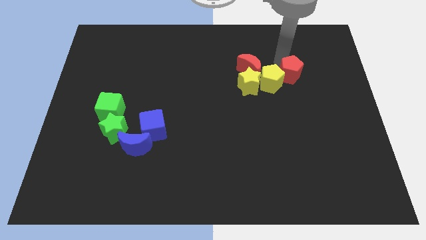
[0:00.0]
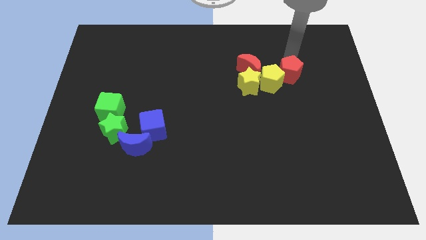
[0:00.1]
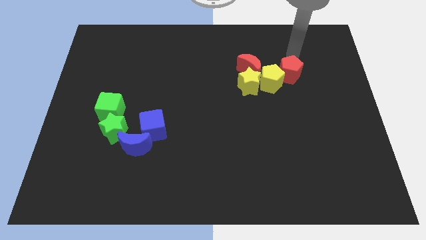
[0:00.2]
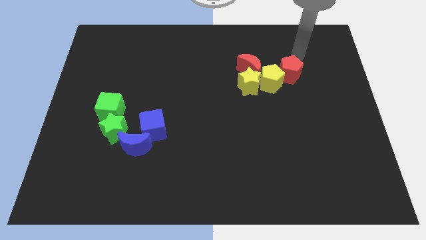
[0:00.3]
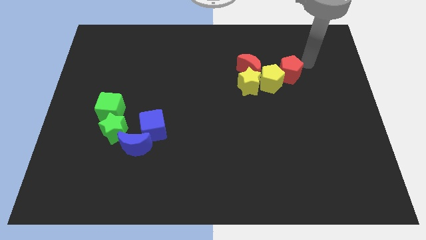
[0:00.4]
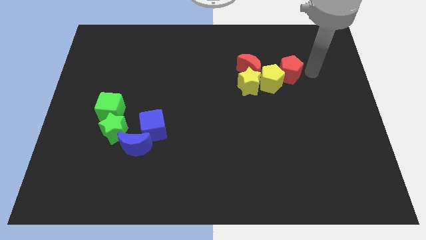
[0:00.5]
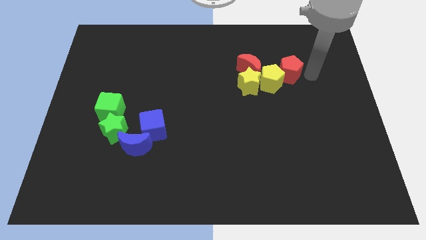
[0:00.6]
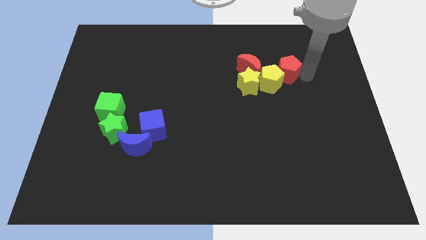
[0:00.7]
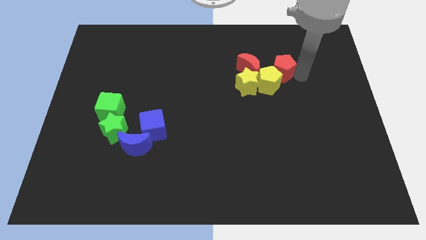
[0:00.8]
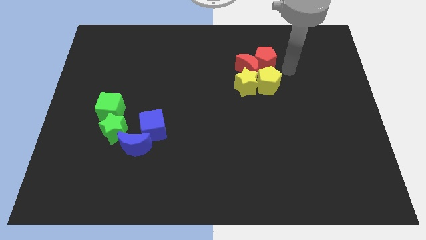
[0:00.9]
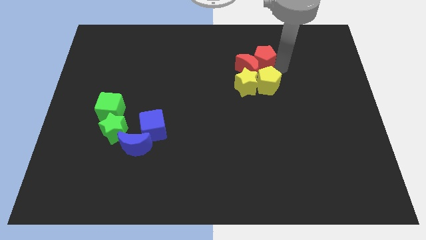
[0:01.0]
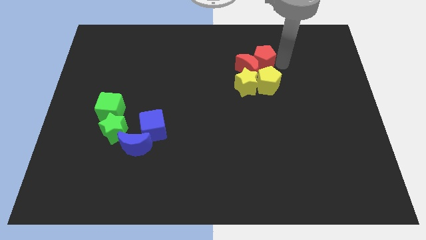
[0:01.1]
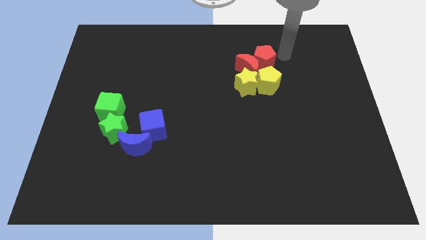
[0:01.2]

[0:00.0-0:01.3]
slide the red pentagon into the red crescent

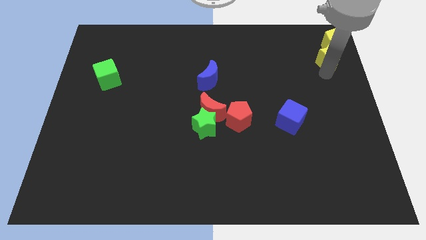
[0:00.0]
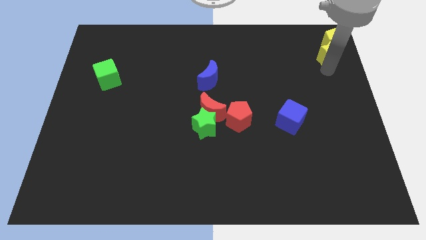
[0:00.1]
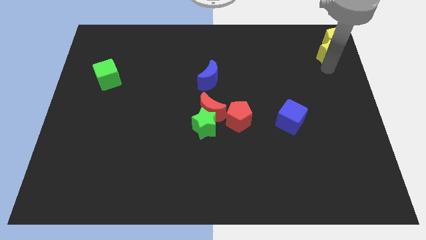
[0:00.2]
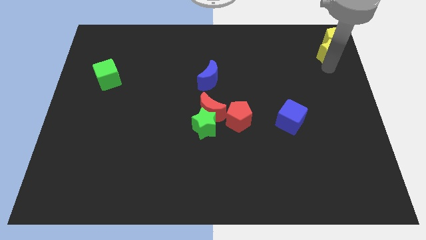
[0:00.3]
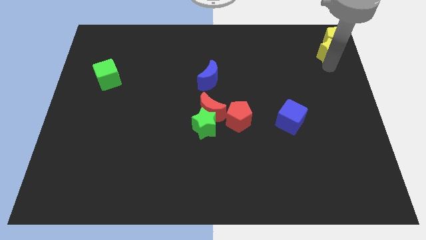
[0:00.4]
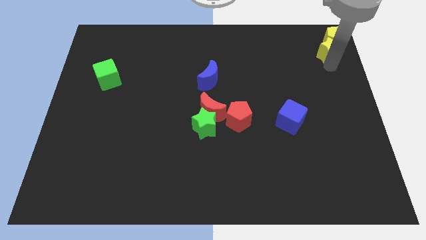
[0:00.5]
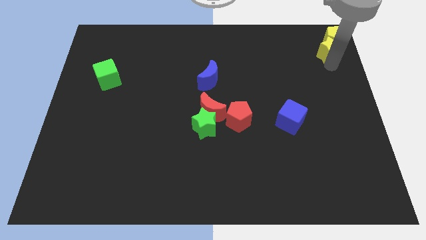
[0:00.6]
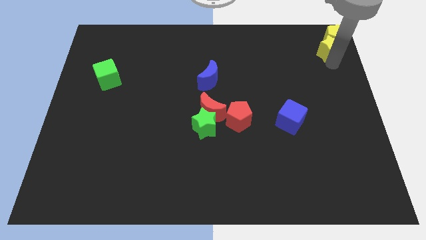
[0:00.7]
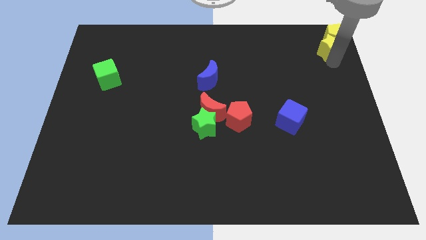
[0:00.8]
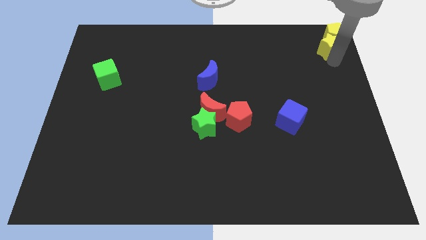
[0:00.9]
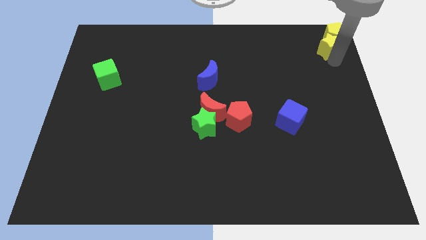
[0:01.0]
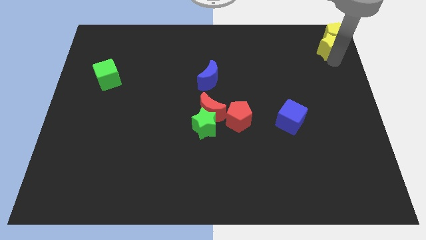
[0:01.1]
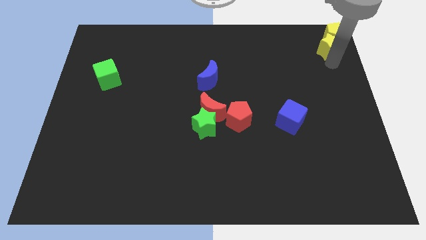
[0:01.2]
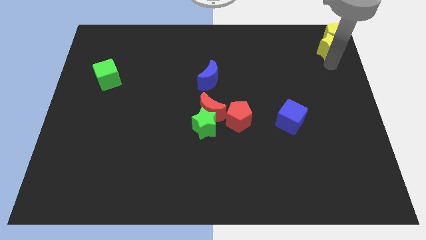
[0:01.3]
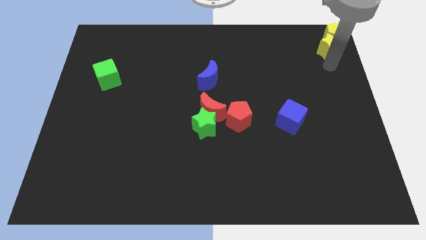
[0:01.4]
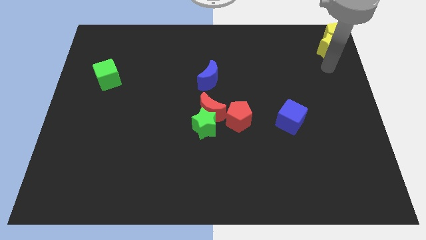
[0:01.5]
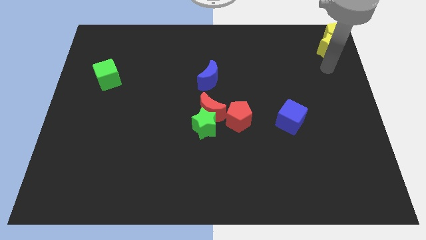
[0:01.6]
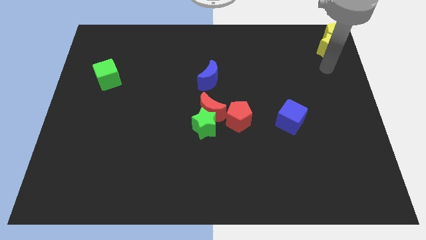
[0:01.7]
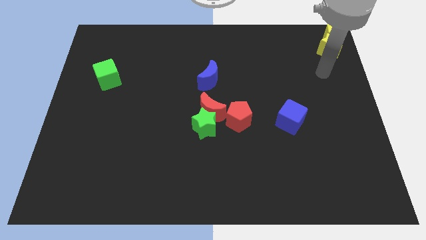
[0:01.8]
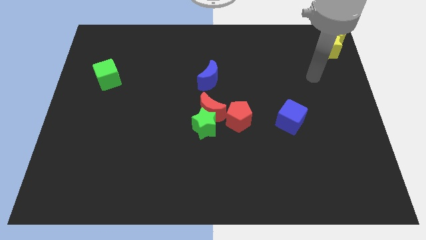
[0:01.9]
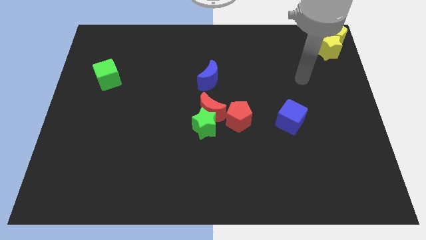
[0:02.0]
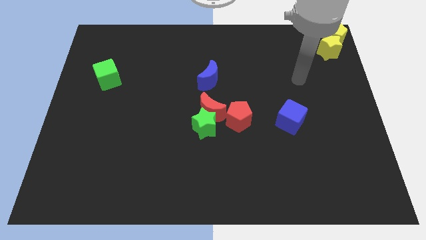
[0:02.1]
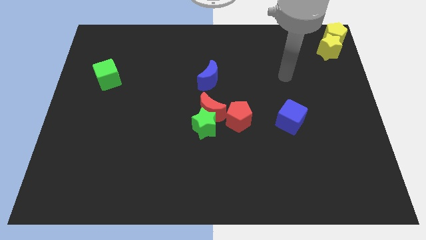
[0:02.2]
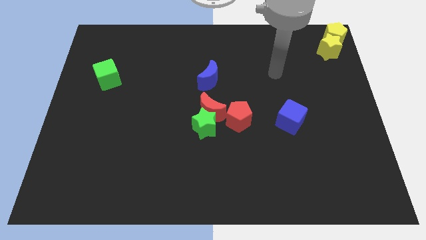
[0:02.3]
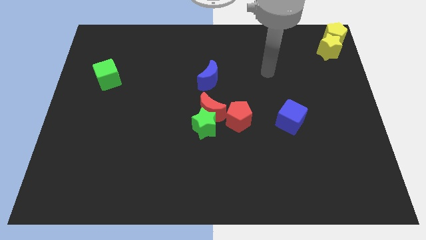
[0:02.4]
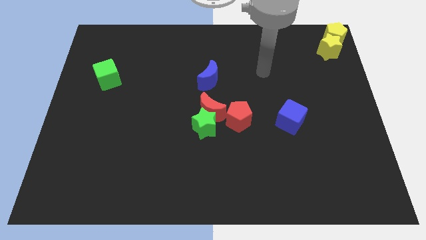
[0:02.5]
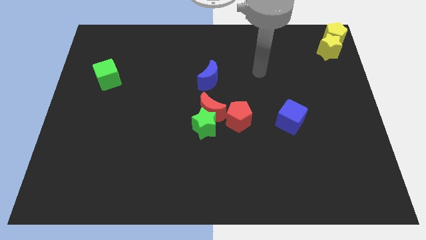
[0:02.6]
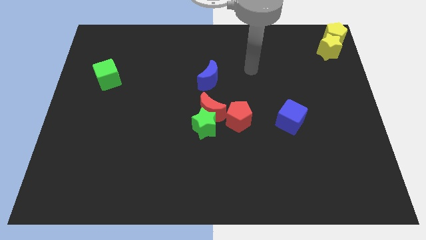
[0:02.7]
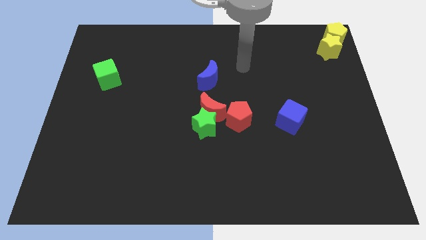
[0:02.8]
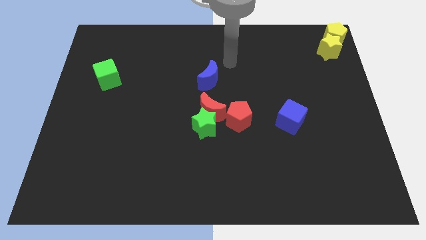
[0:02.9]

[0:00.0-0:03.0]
move yellow star and yellow pentagon to the top right

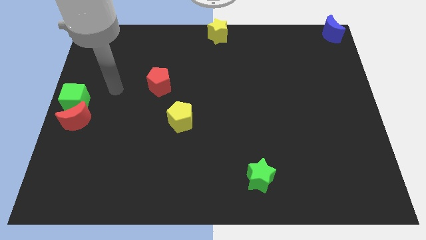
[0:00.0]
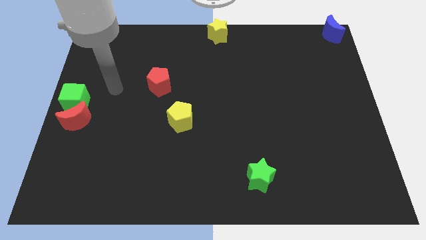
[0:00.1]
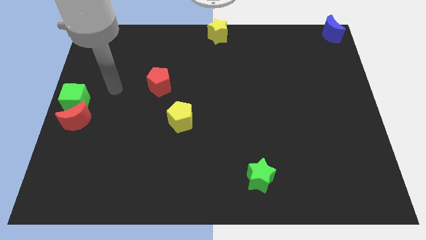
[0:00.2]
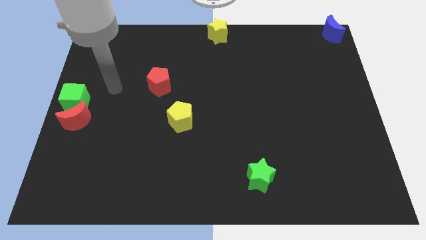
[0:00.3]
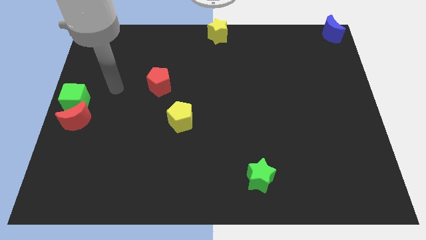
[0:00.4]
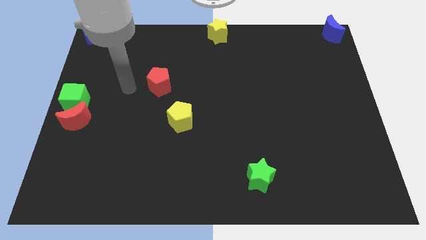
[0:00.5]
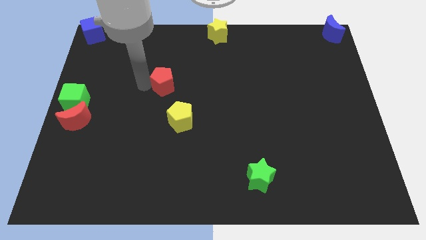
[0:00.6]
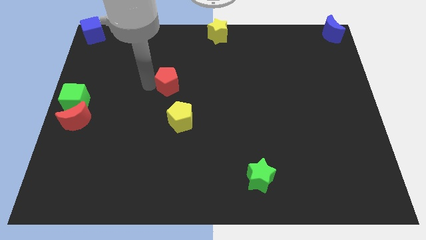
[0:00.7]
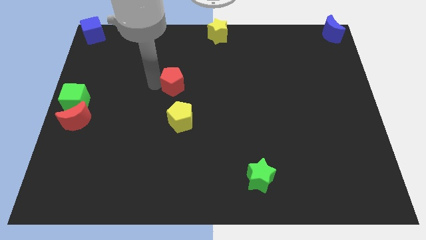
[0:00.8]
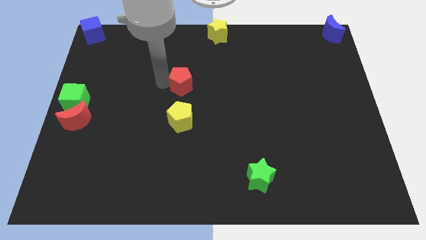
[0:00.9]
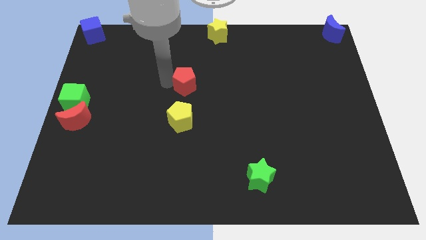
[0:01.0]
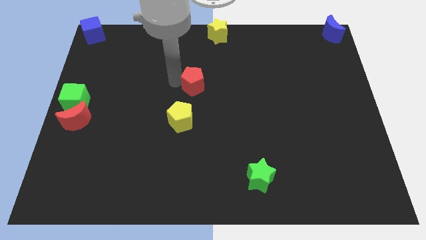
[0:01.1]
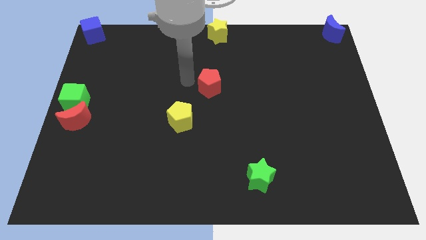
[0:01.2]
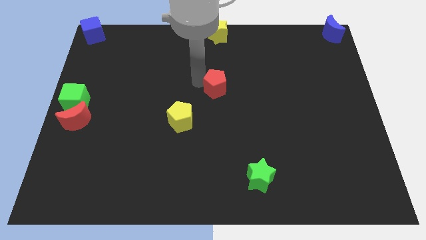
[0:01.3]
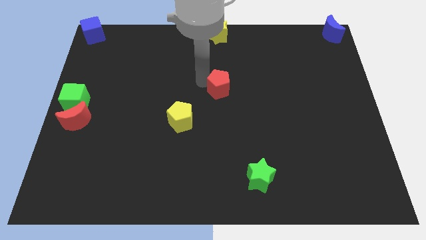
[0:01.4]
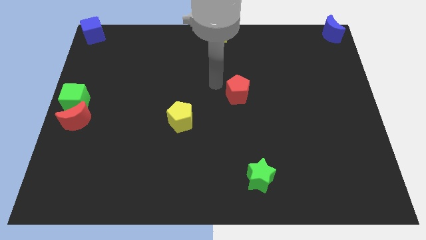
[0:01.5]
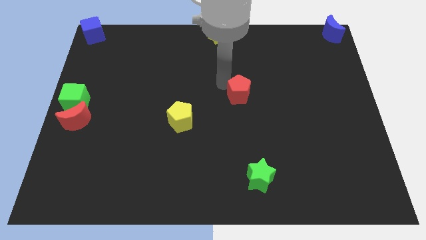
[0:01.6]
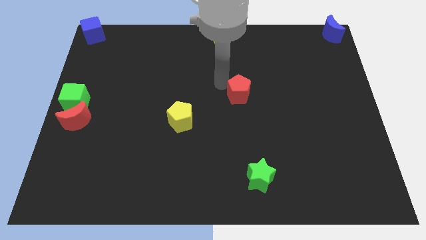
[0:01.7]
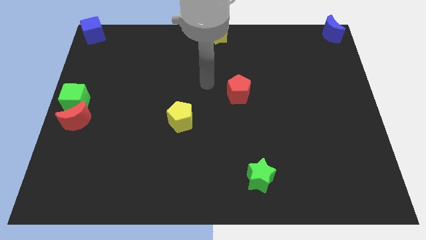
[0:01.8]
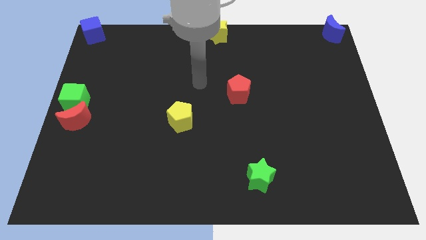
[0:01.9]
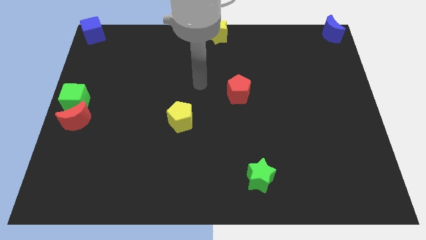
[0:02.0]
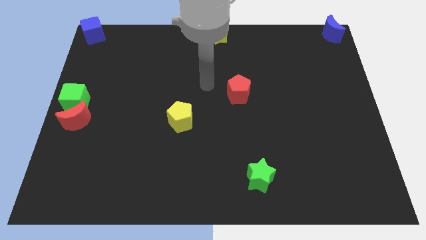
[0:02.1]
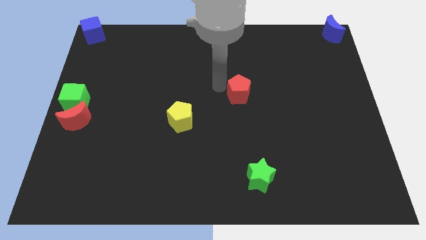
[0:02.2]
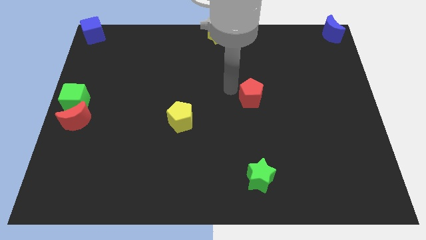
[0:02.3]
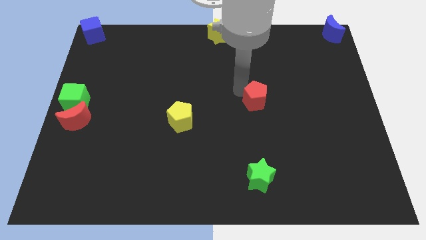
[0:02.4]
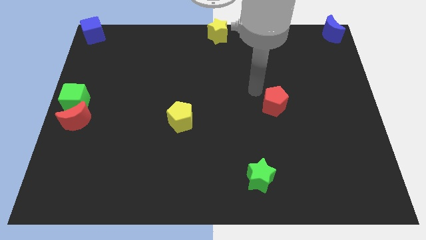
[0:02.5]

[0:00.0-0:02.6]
move the red pentagon diagonally right to the yellow pentagon

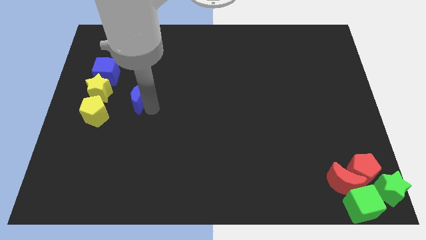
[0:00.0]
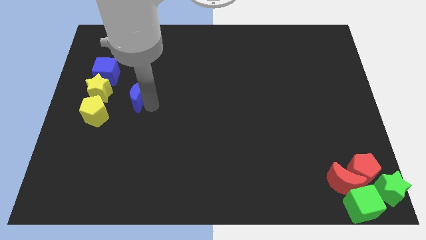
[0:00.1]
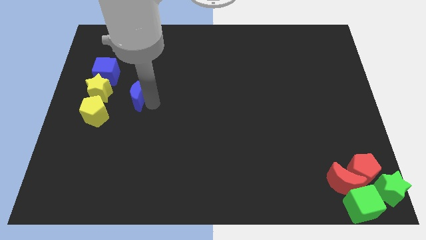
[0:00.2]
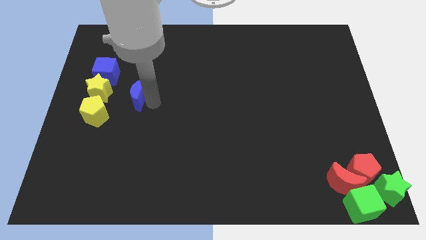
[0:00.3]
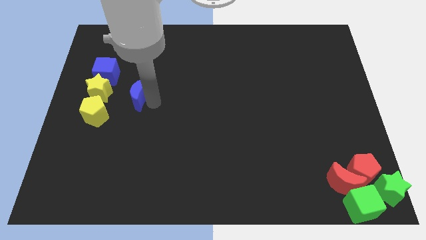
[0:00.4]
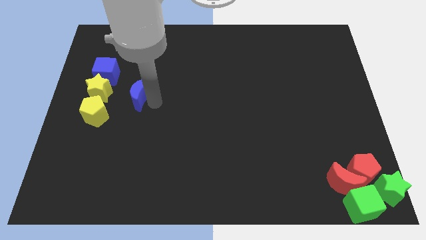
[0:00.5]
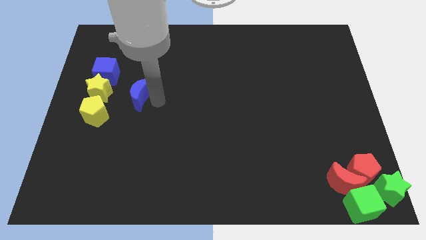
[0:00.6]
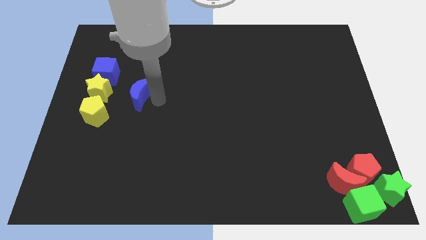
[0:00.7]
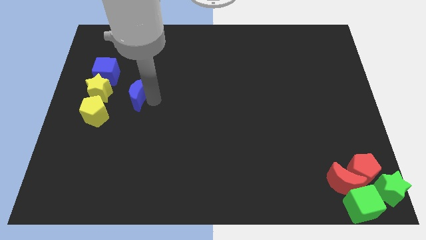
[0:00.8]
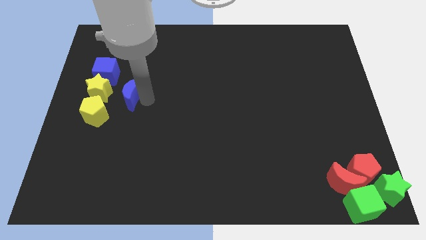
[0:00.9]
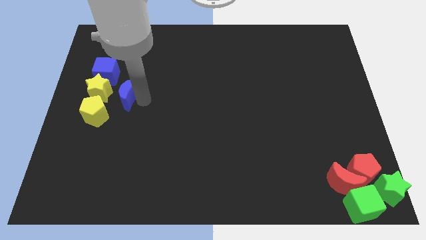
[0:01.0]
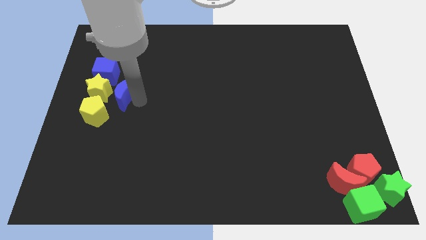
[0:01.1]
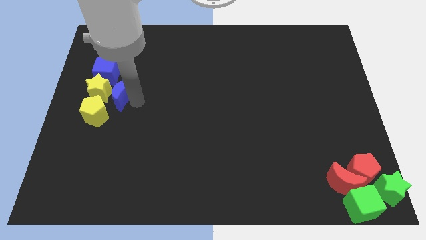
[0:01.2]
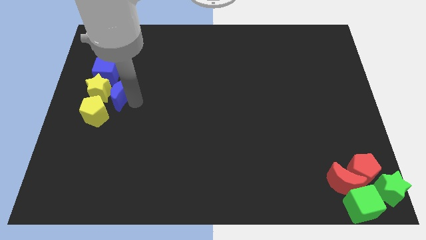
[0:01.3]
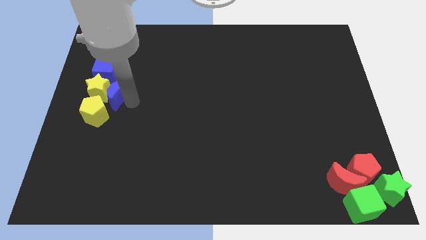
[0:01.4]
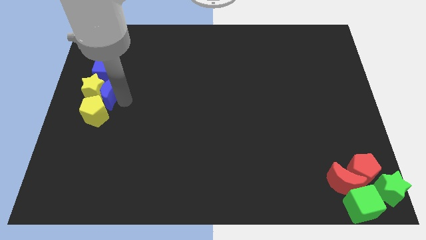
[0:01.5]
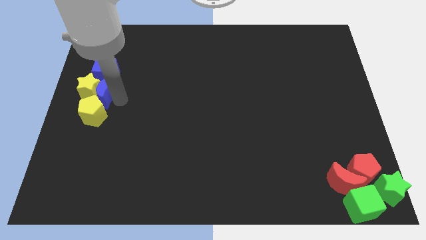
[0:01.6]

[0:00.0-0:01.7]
push the red moon into the yellow star
